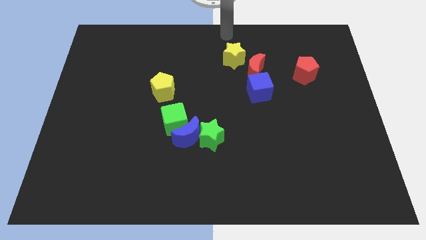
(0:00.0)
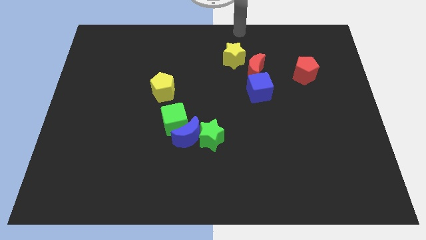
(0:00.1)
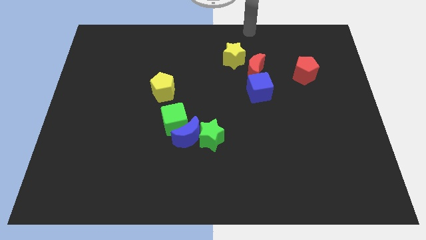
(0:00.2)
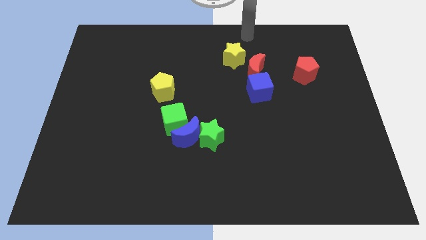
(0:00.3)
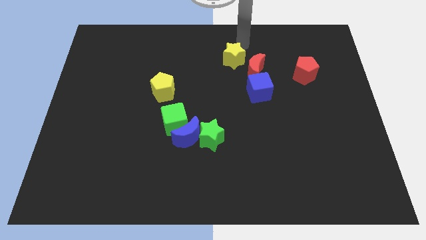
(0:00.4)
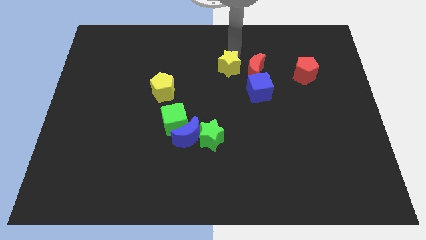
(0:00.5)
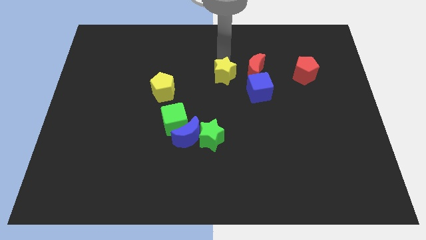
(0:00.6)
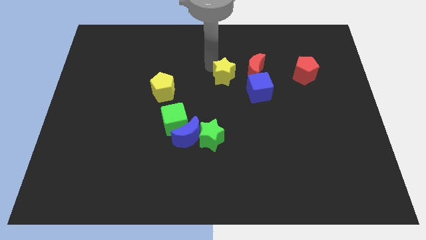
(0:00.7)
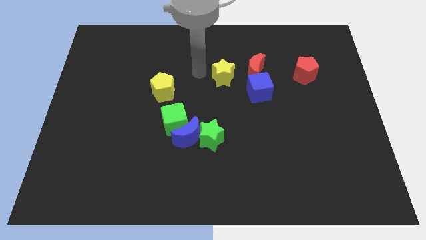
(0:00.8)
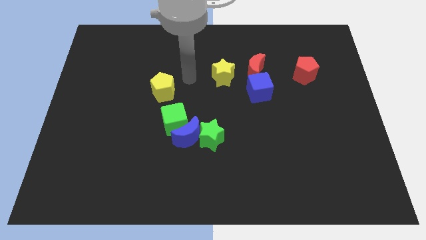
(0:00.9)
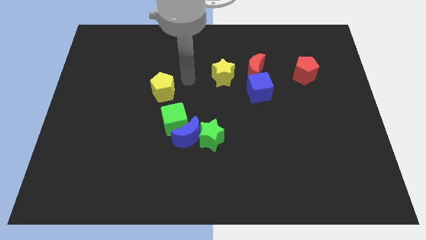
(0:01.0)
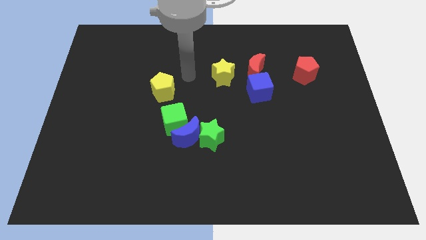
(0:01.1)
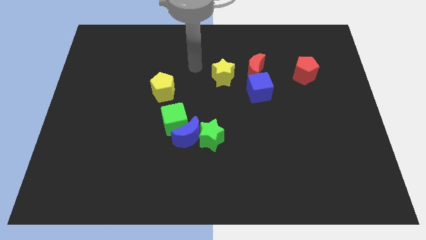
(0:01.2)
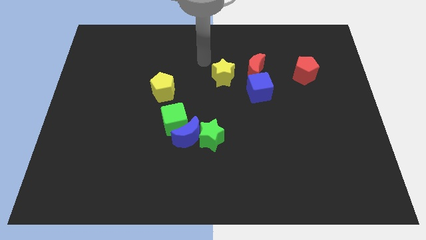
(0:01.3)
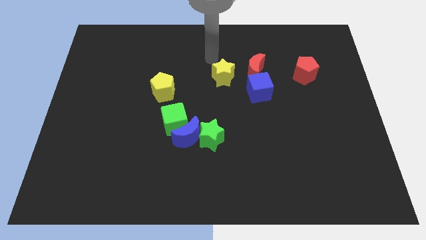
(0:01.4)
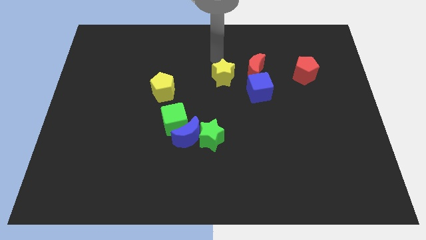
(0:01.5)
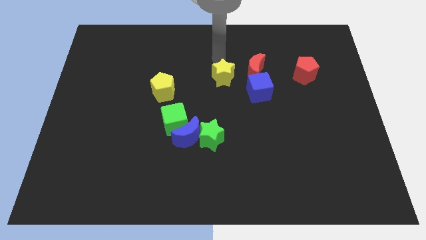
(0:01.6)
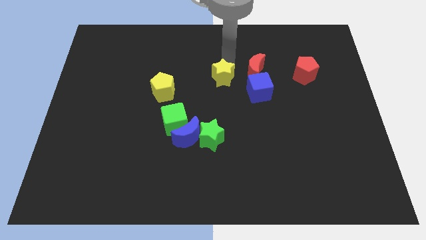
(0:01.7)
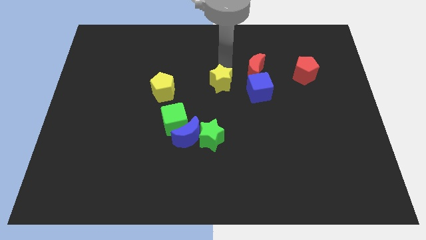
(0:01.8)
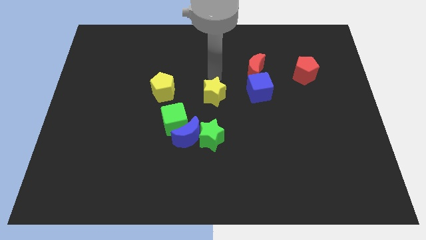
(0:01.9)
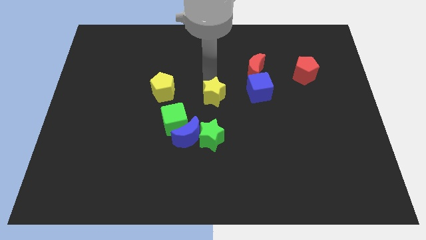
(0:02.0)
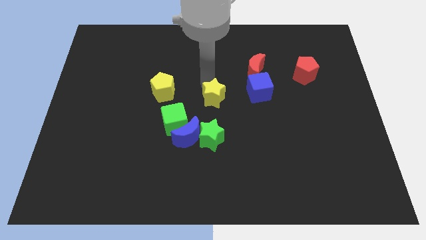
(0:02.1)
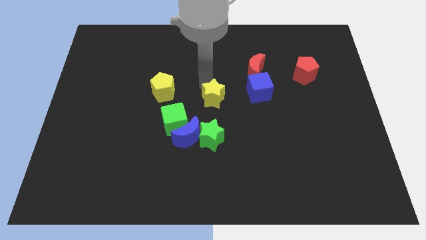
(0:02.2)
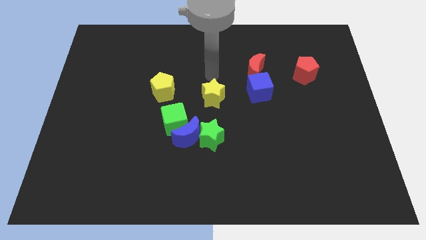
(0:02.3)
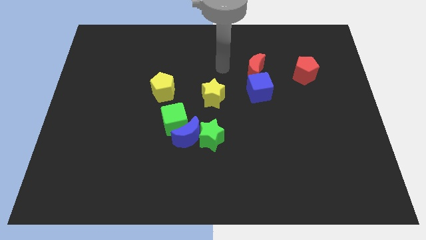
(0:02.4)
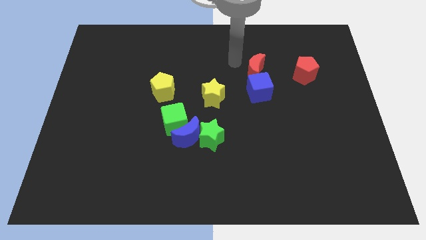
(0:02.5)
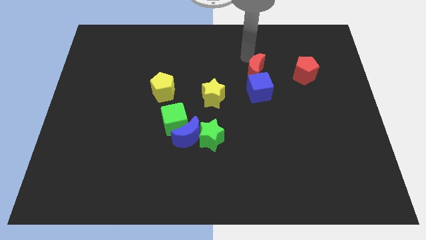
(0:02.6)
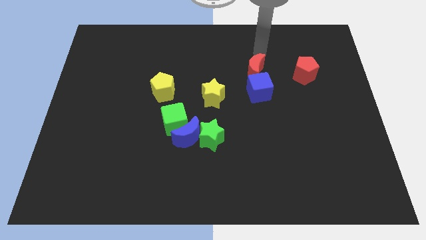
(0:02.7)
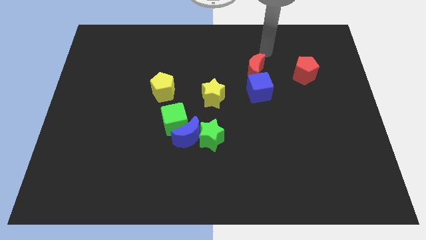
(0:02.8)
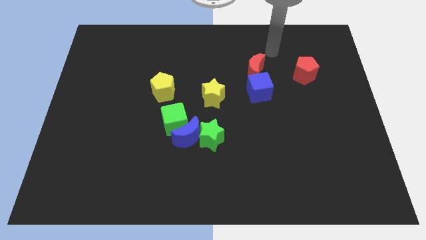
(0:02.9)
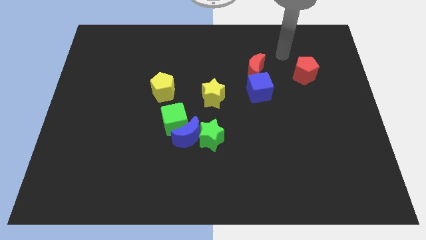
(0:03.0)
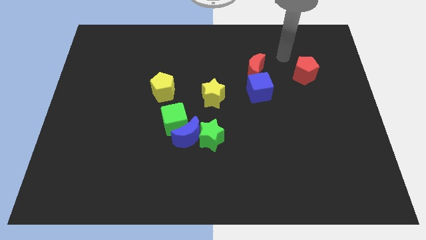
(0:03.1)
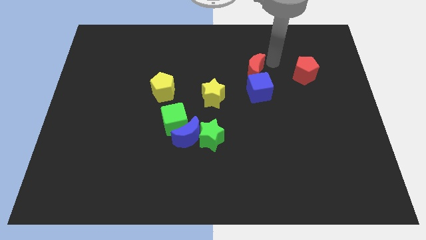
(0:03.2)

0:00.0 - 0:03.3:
move the yellow star close to the green star

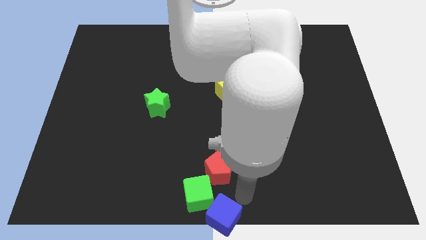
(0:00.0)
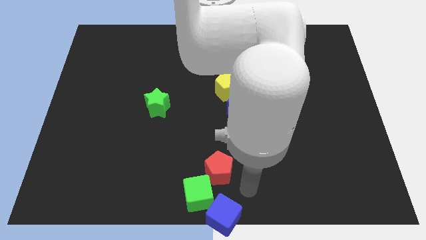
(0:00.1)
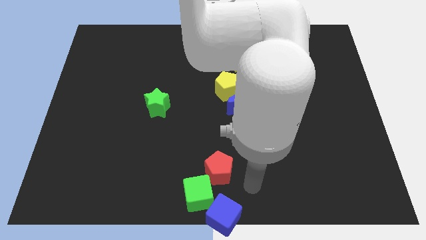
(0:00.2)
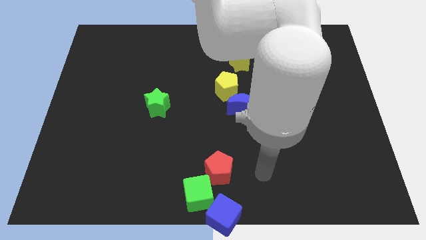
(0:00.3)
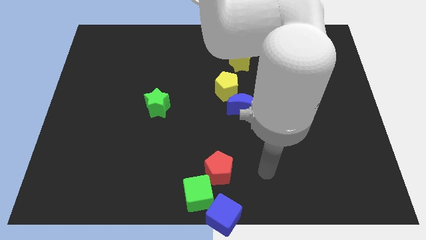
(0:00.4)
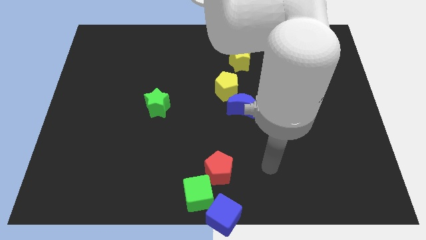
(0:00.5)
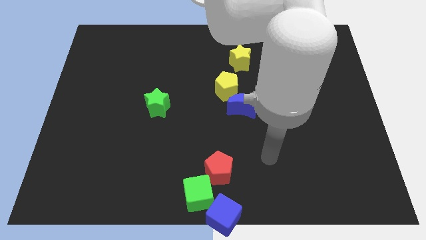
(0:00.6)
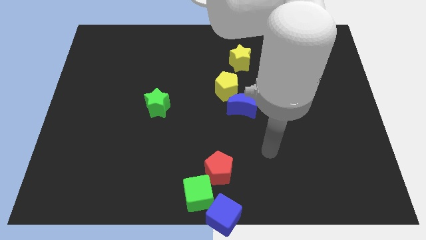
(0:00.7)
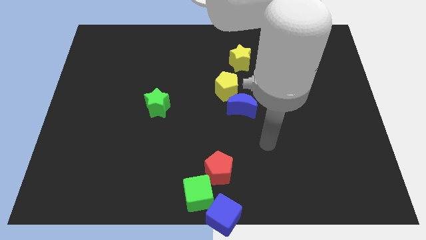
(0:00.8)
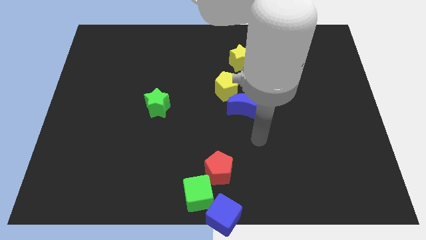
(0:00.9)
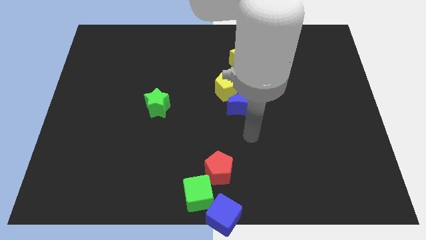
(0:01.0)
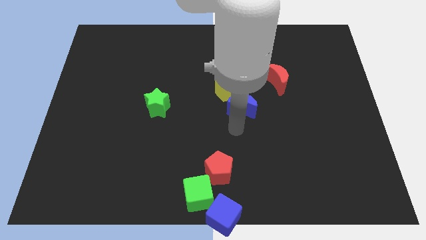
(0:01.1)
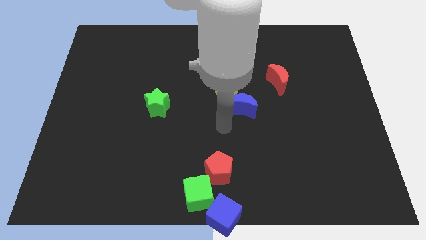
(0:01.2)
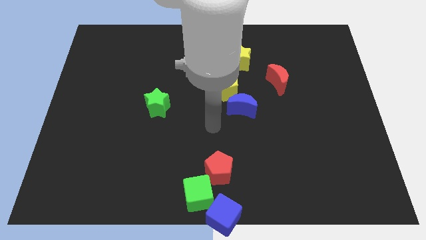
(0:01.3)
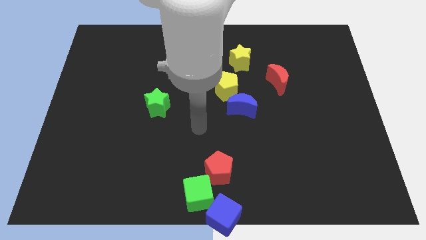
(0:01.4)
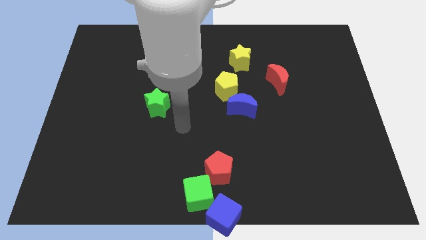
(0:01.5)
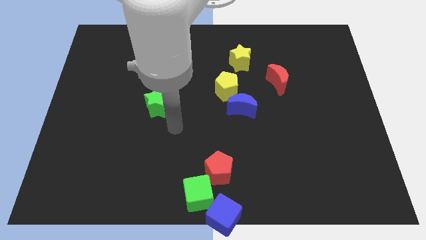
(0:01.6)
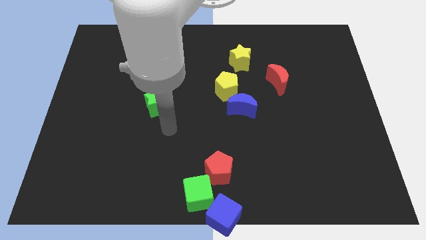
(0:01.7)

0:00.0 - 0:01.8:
move your arm away from the blue cube

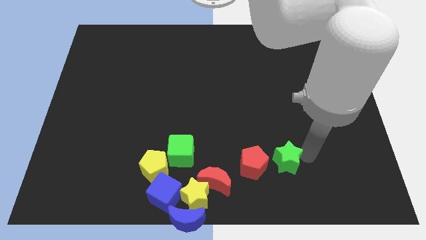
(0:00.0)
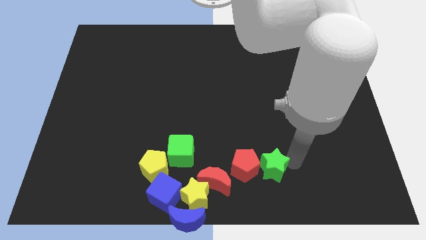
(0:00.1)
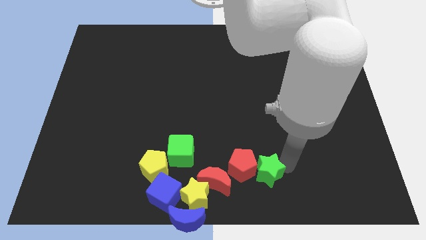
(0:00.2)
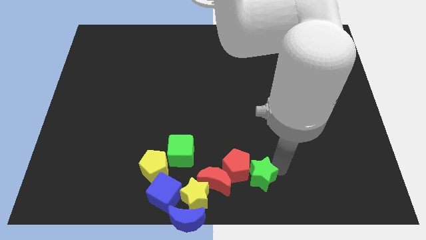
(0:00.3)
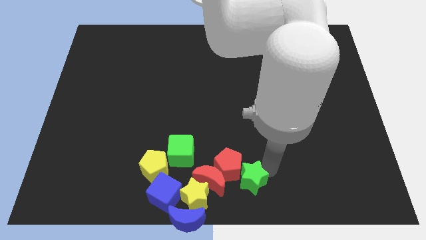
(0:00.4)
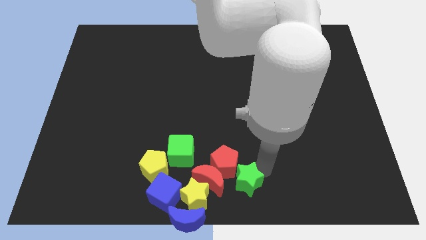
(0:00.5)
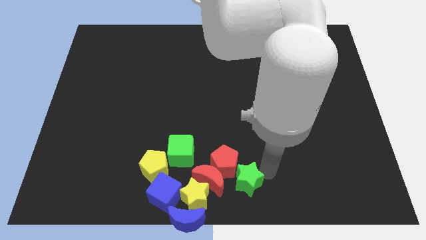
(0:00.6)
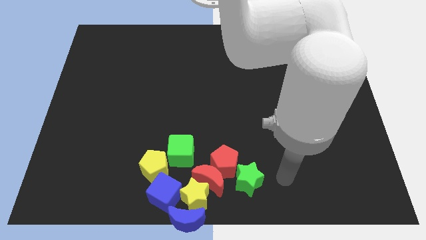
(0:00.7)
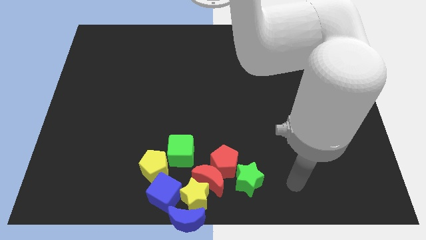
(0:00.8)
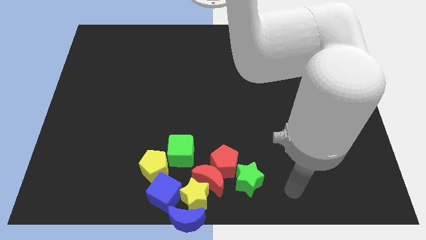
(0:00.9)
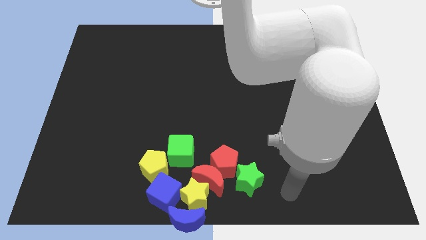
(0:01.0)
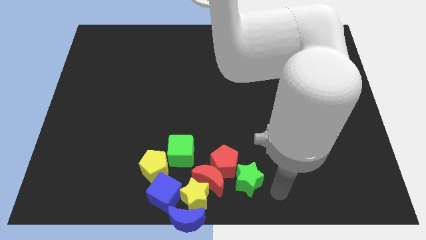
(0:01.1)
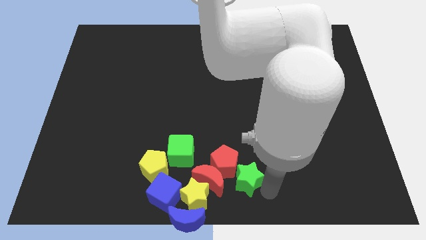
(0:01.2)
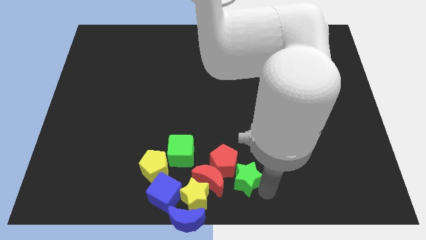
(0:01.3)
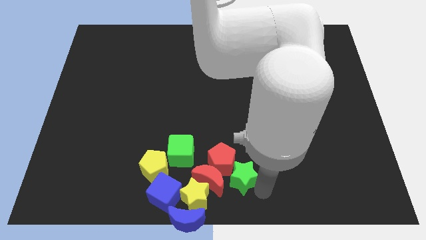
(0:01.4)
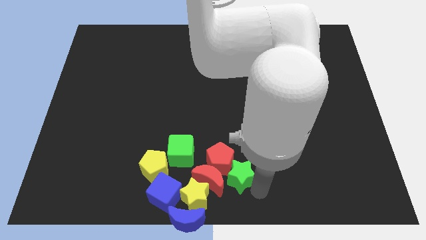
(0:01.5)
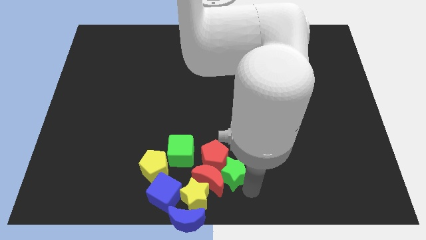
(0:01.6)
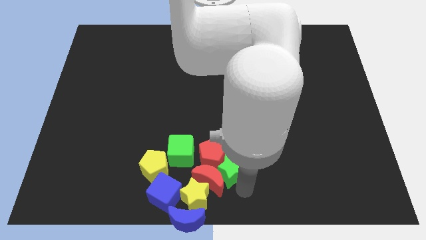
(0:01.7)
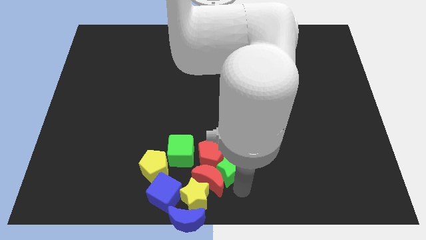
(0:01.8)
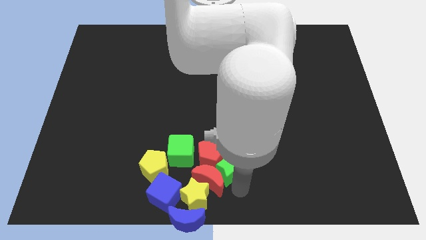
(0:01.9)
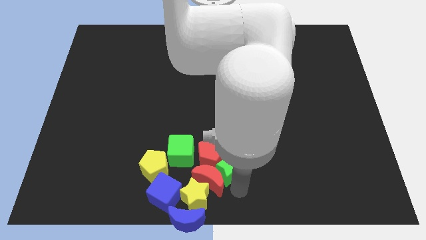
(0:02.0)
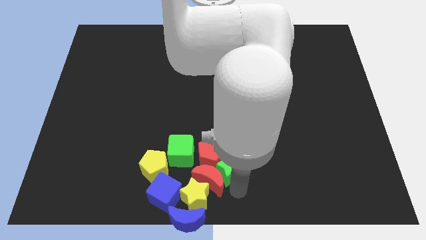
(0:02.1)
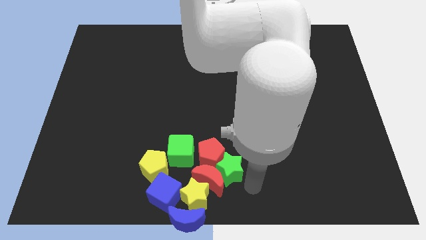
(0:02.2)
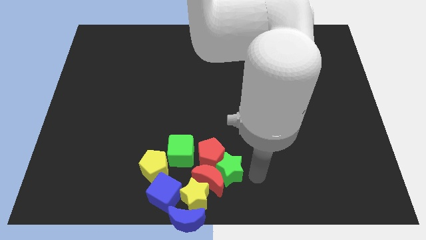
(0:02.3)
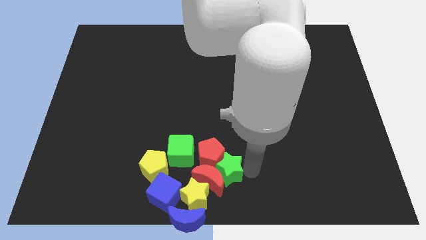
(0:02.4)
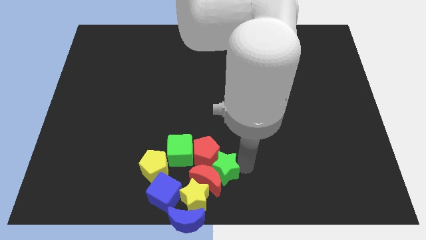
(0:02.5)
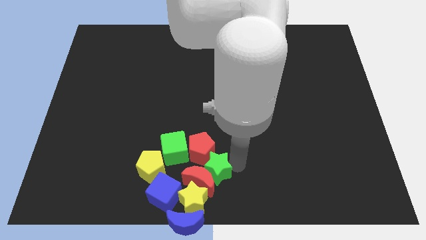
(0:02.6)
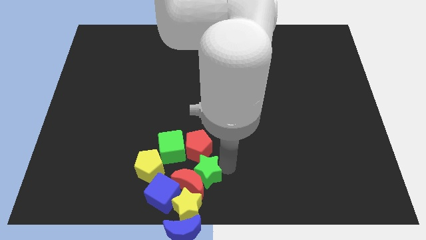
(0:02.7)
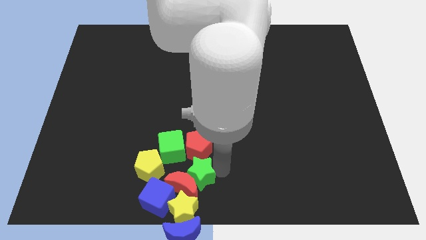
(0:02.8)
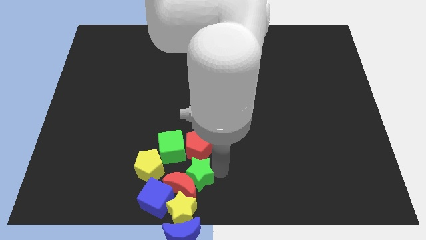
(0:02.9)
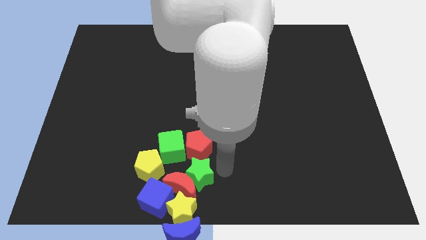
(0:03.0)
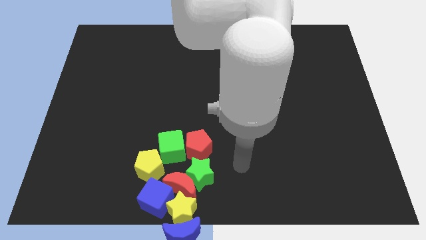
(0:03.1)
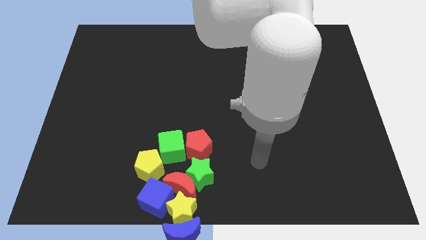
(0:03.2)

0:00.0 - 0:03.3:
push the red crescent using green star

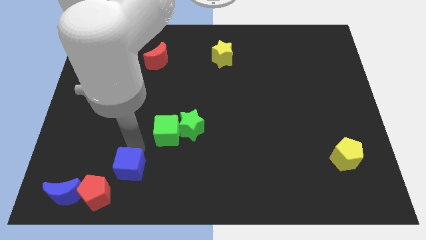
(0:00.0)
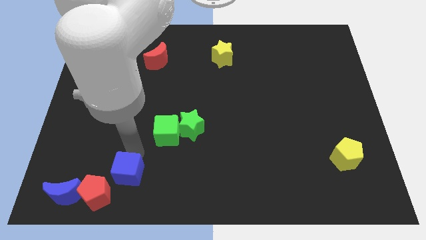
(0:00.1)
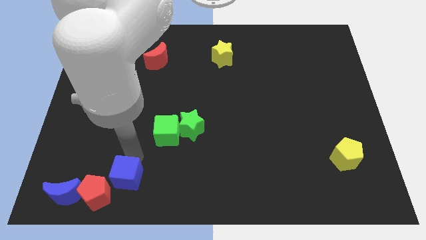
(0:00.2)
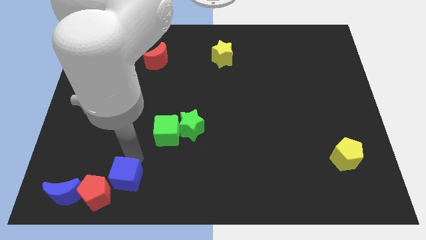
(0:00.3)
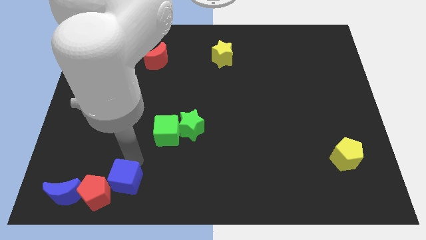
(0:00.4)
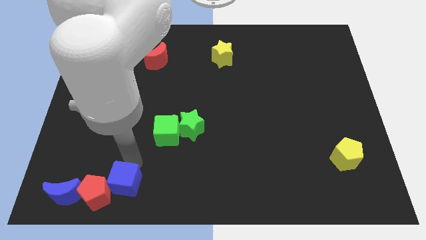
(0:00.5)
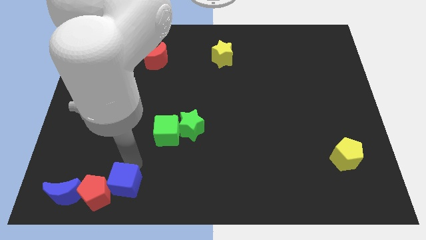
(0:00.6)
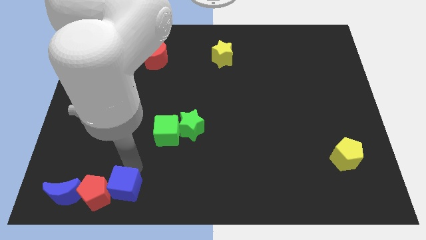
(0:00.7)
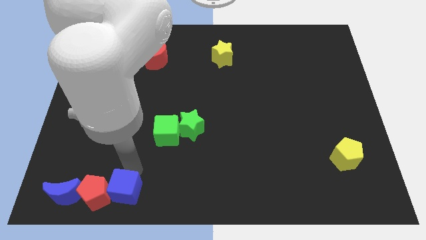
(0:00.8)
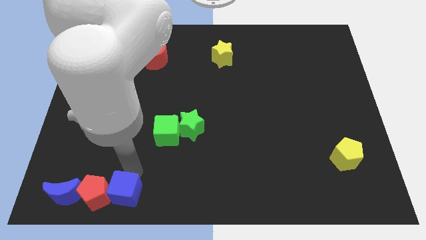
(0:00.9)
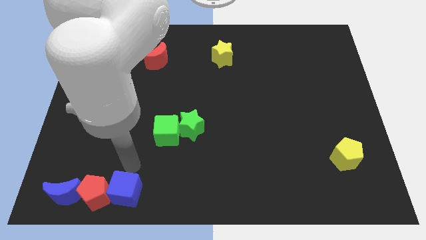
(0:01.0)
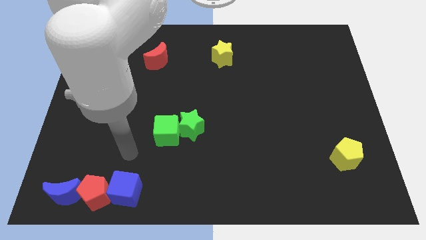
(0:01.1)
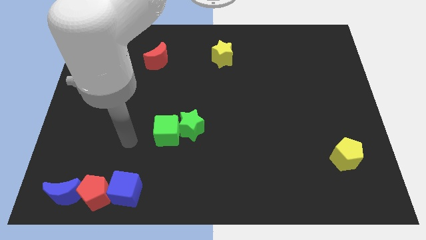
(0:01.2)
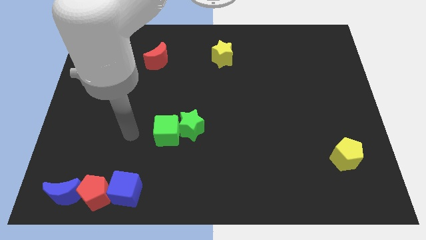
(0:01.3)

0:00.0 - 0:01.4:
push the blue cube to the right of the red pentagon
